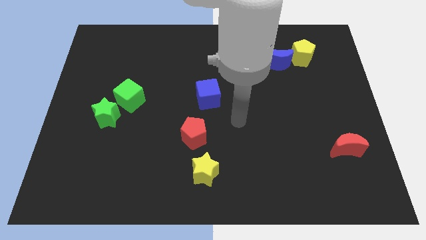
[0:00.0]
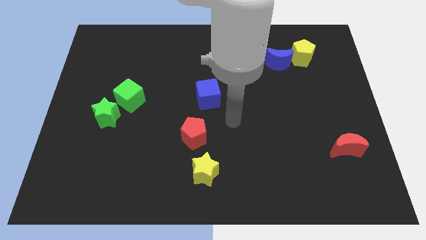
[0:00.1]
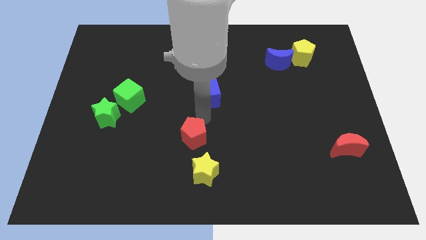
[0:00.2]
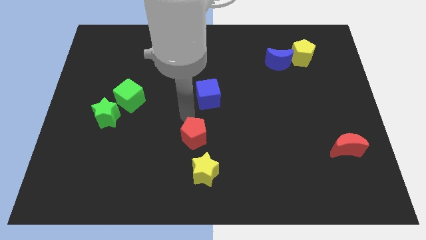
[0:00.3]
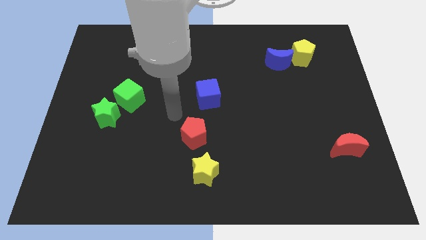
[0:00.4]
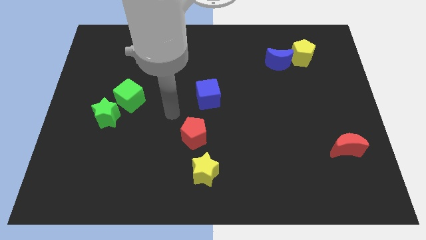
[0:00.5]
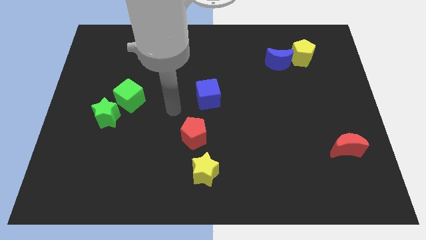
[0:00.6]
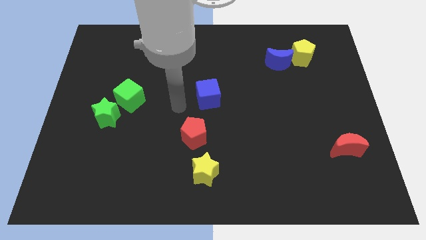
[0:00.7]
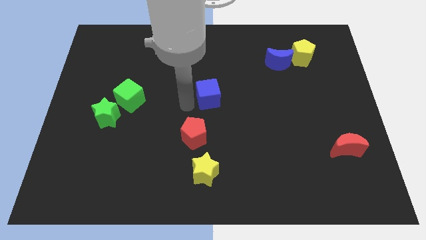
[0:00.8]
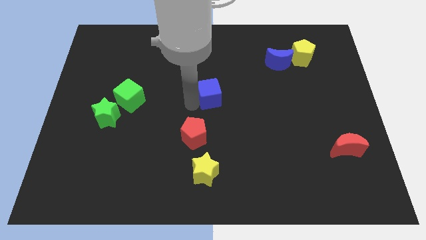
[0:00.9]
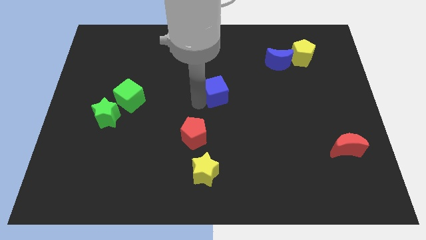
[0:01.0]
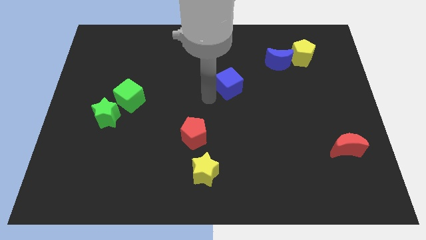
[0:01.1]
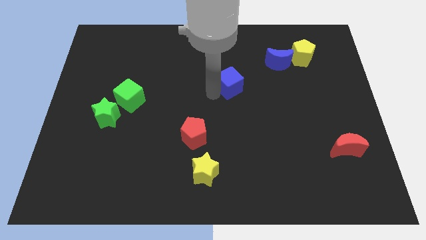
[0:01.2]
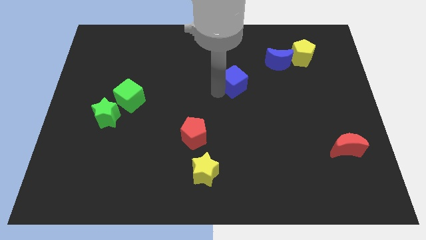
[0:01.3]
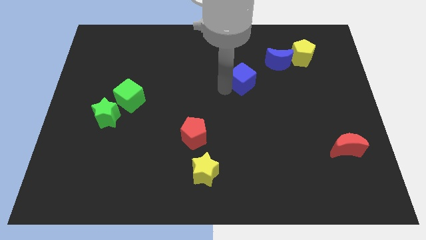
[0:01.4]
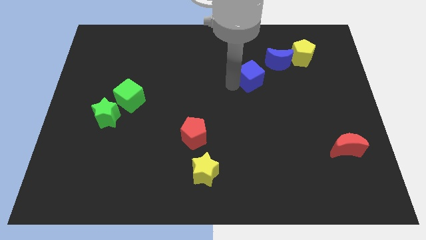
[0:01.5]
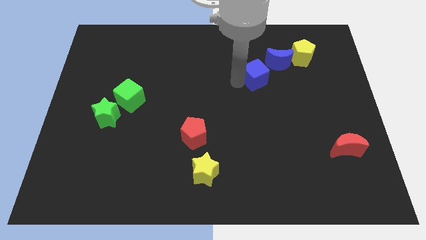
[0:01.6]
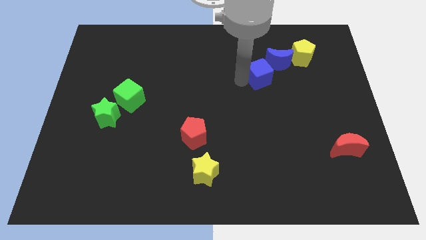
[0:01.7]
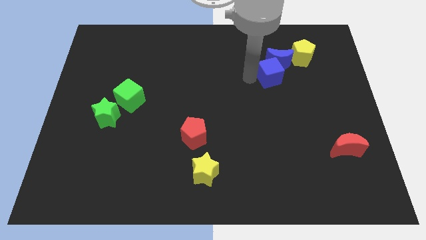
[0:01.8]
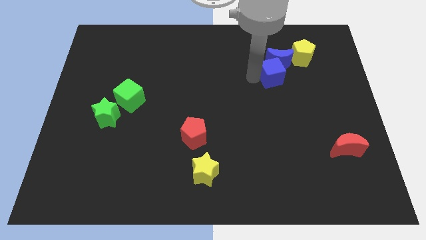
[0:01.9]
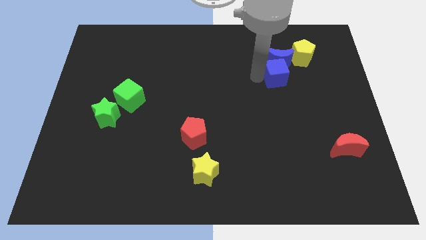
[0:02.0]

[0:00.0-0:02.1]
put the blue cube to the blue moon

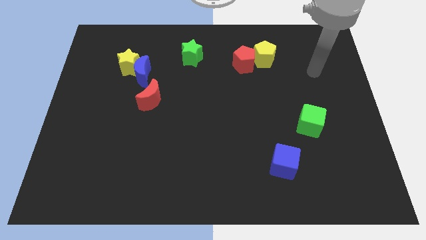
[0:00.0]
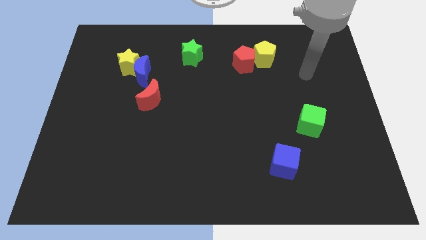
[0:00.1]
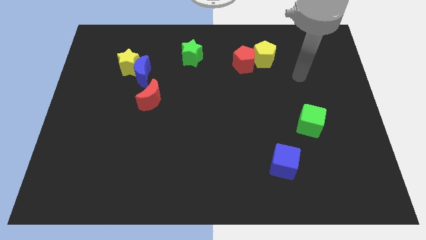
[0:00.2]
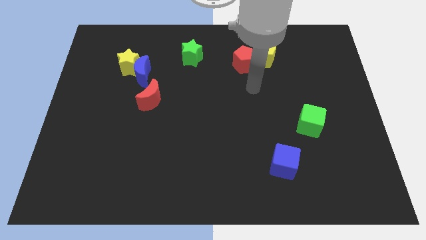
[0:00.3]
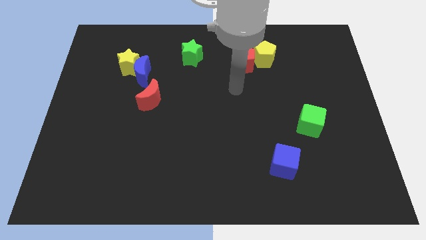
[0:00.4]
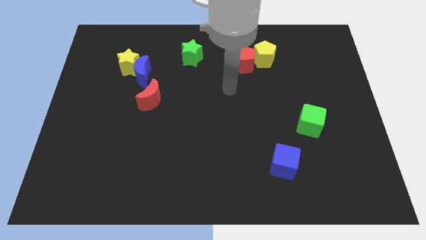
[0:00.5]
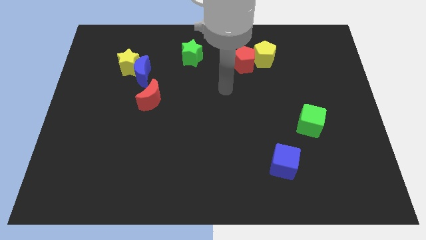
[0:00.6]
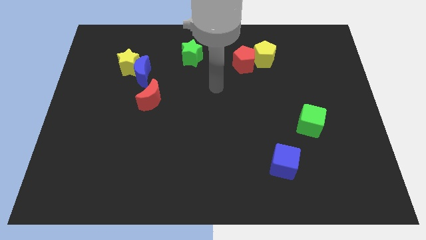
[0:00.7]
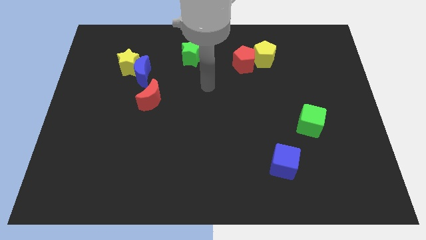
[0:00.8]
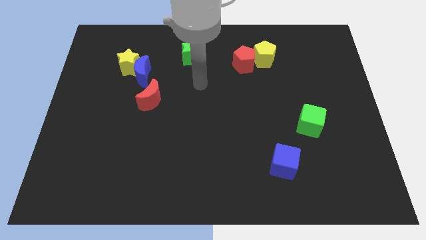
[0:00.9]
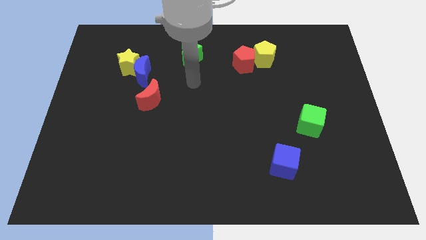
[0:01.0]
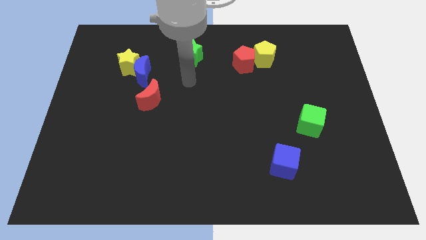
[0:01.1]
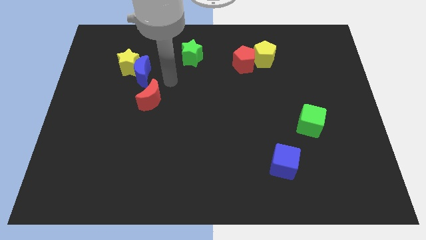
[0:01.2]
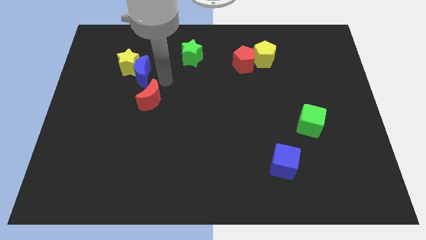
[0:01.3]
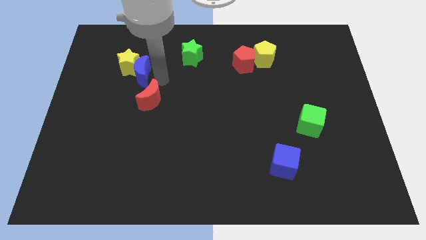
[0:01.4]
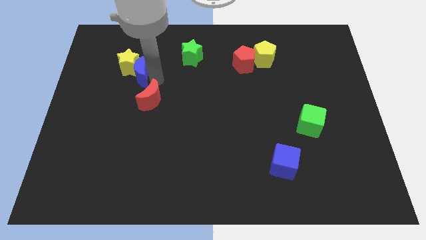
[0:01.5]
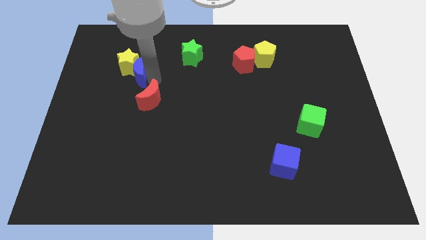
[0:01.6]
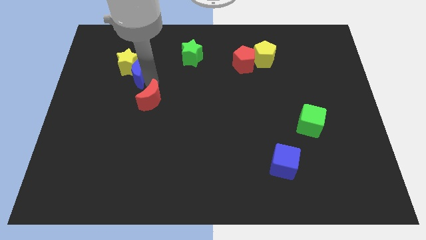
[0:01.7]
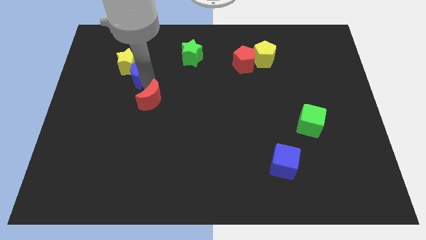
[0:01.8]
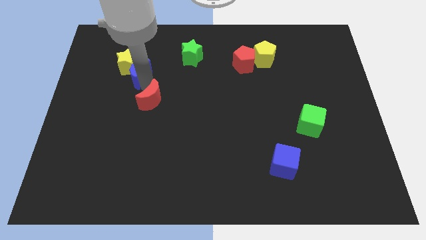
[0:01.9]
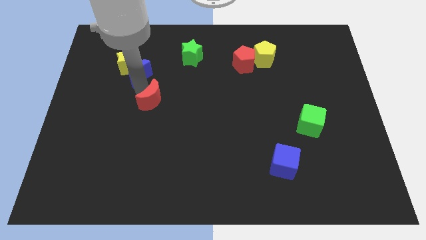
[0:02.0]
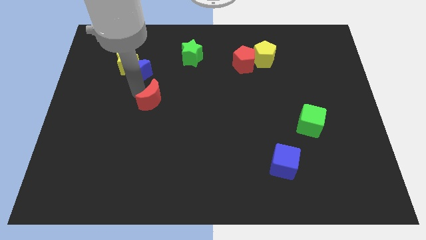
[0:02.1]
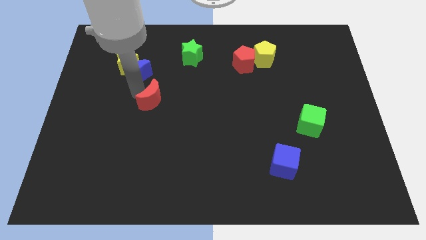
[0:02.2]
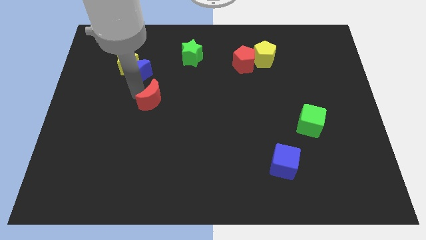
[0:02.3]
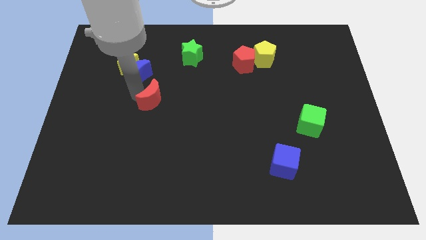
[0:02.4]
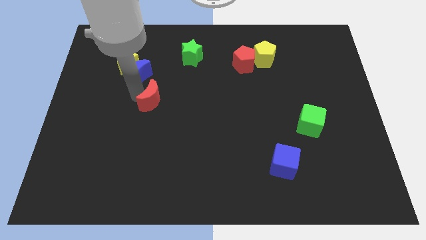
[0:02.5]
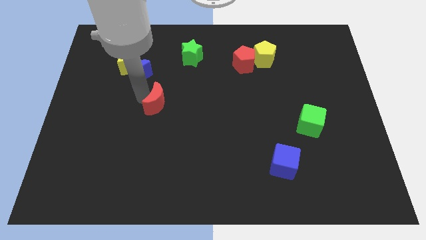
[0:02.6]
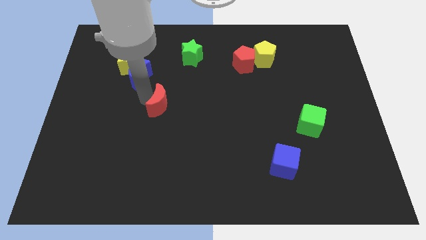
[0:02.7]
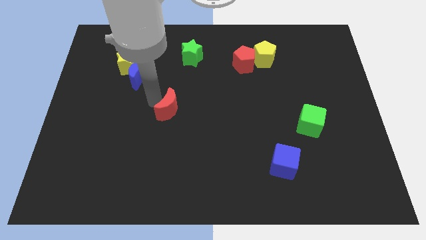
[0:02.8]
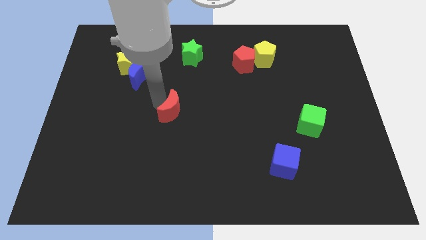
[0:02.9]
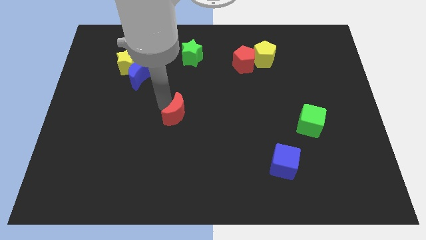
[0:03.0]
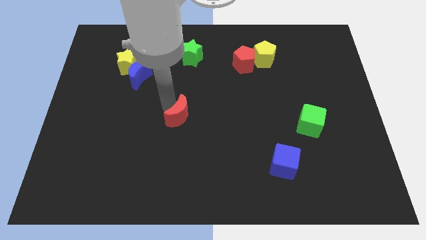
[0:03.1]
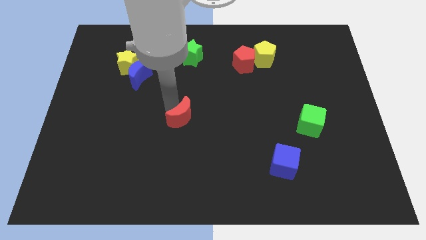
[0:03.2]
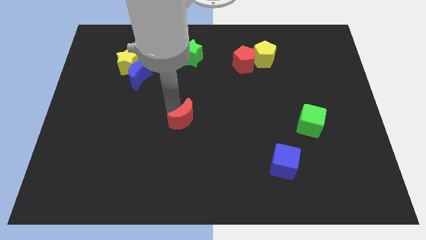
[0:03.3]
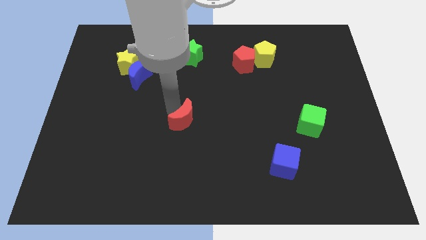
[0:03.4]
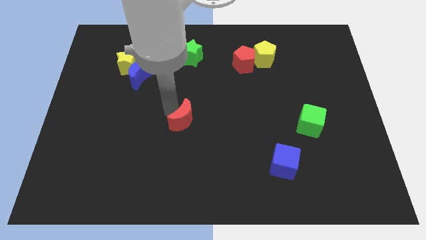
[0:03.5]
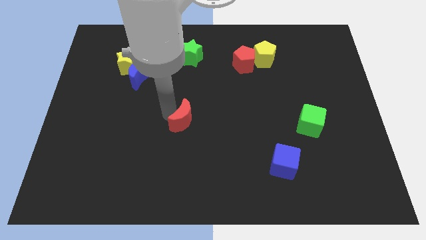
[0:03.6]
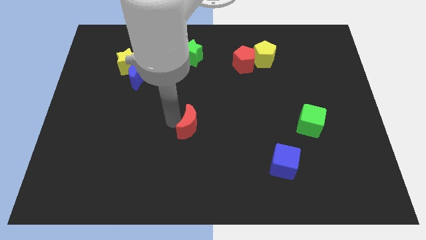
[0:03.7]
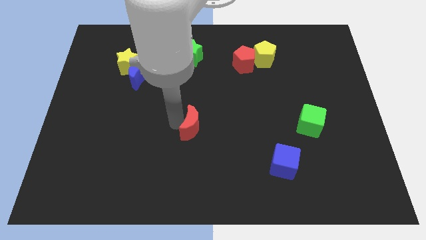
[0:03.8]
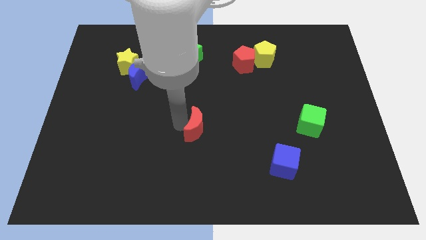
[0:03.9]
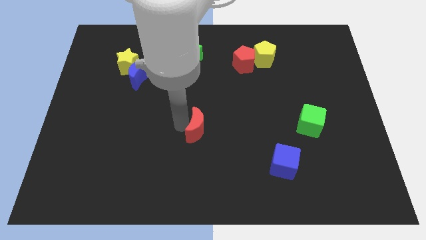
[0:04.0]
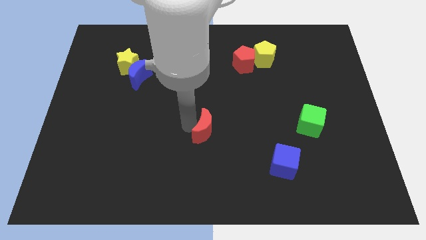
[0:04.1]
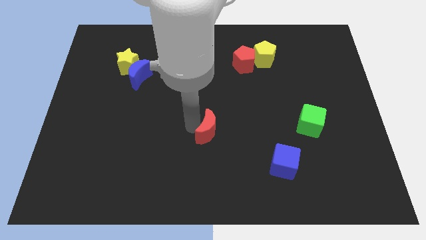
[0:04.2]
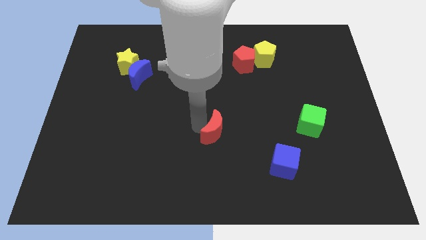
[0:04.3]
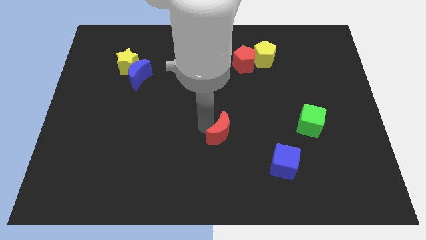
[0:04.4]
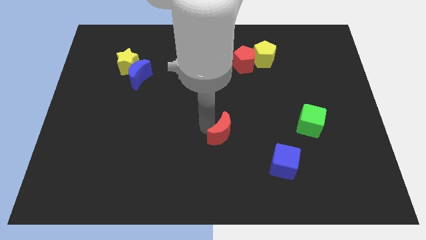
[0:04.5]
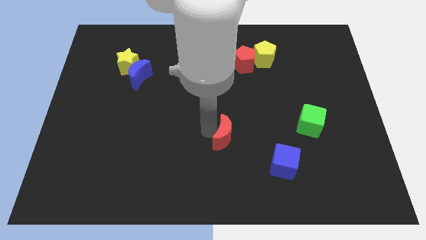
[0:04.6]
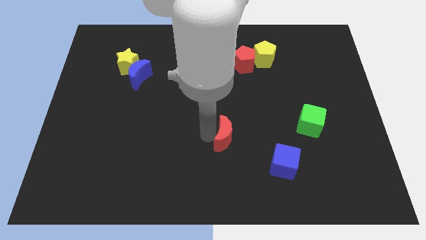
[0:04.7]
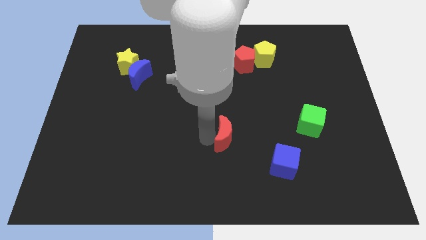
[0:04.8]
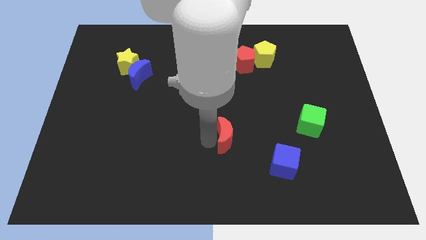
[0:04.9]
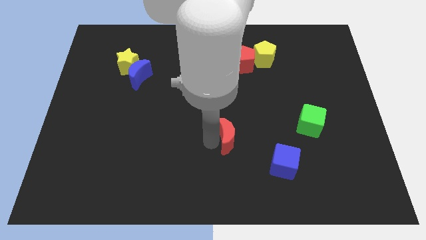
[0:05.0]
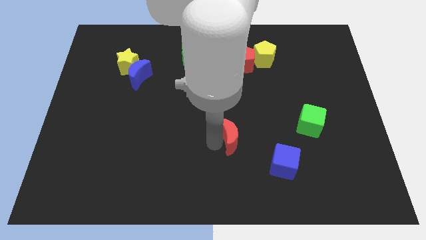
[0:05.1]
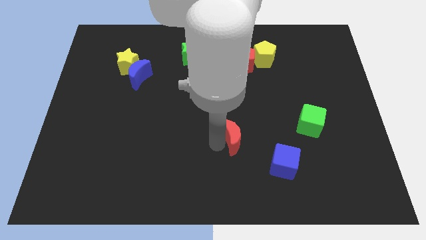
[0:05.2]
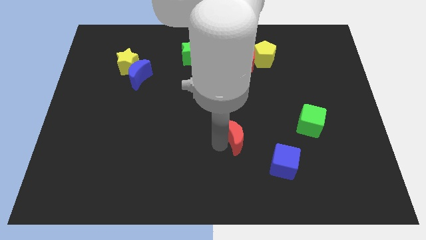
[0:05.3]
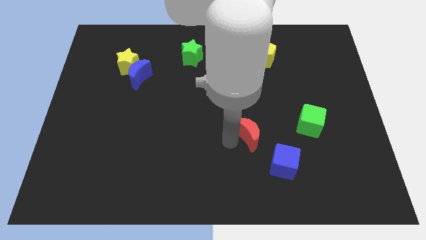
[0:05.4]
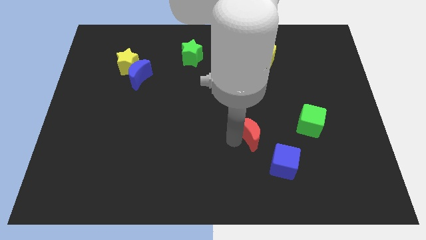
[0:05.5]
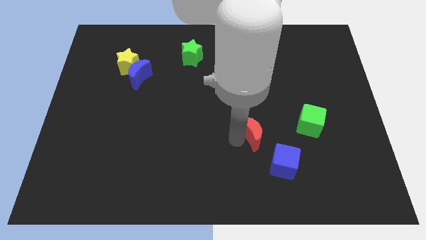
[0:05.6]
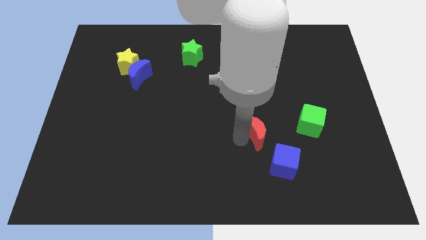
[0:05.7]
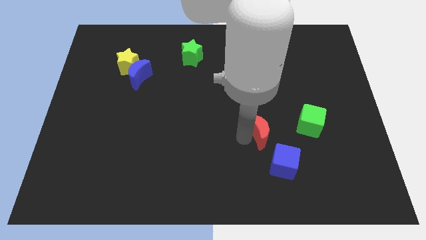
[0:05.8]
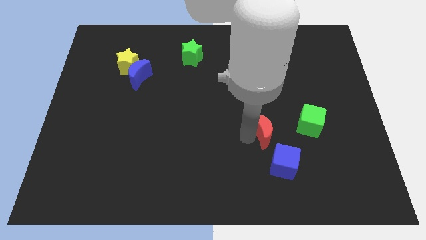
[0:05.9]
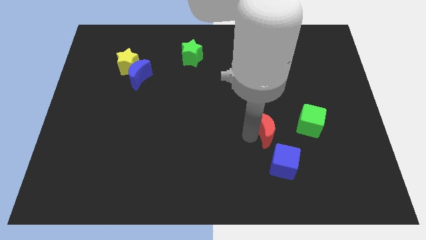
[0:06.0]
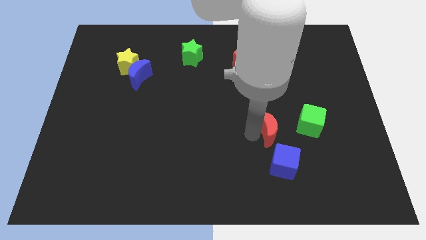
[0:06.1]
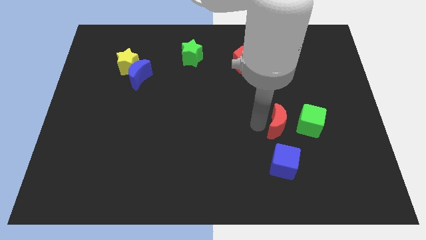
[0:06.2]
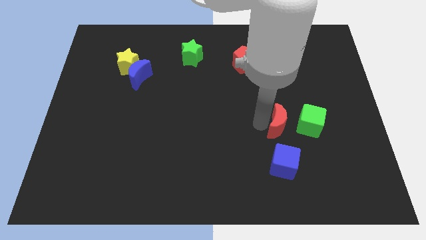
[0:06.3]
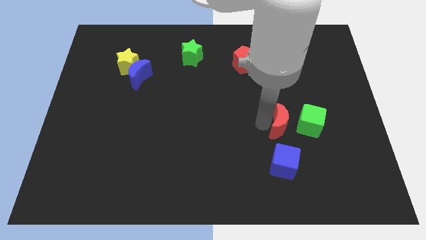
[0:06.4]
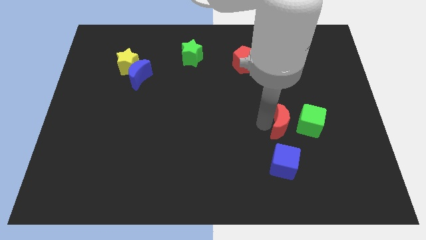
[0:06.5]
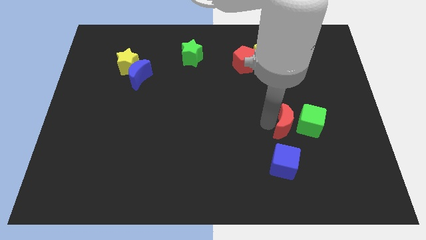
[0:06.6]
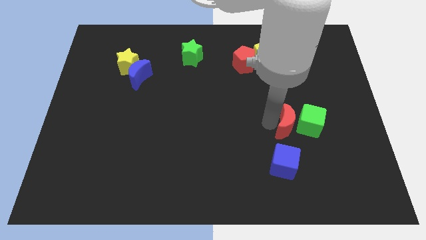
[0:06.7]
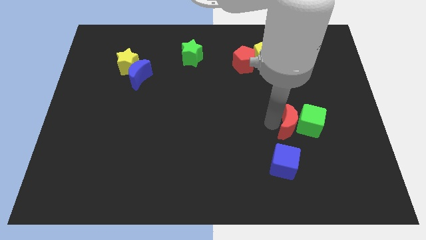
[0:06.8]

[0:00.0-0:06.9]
put the red moon next to the green cube
